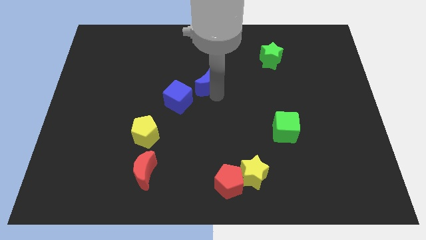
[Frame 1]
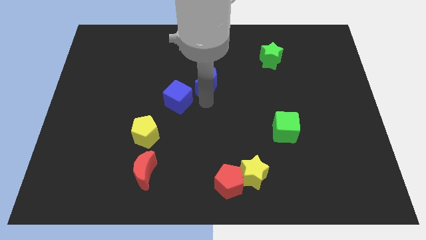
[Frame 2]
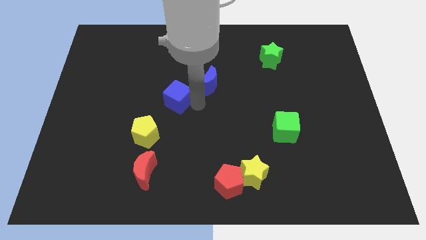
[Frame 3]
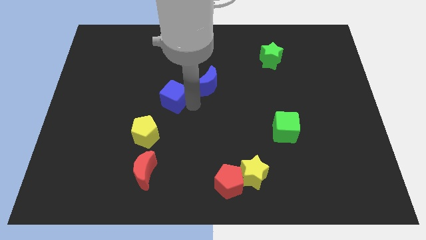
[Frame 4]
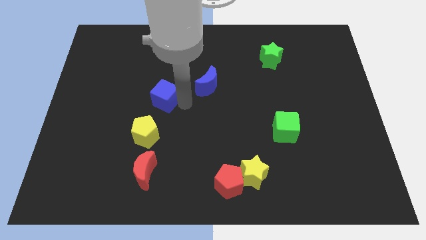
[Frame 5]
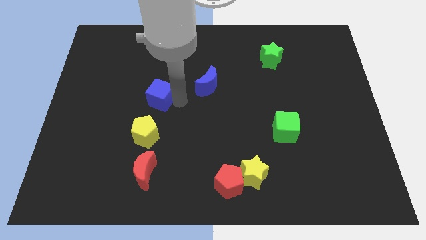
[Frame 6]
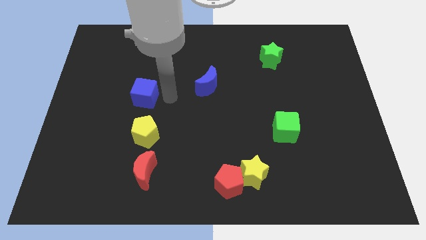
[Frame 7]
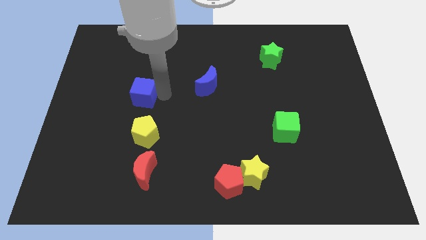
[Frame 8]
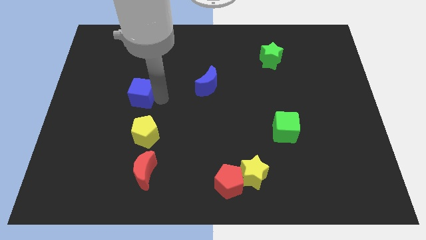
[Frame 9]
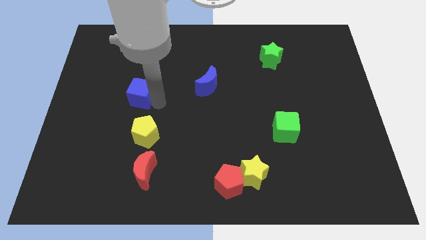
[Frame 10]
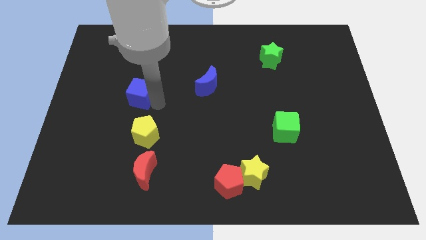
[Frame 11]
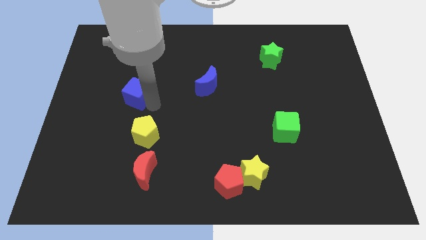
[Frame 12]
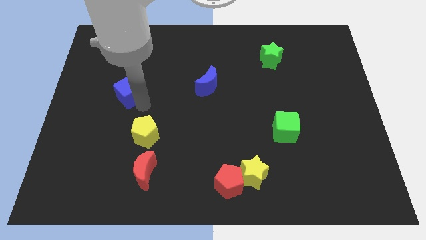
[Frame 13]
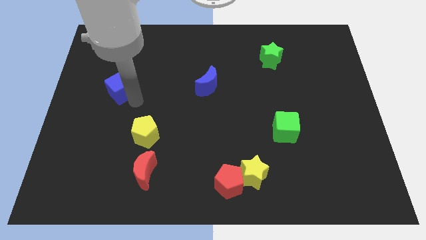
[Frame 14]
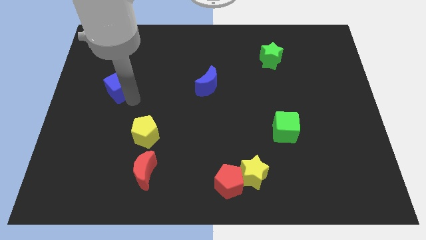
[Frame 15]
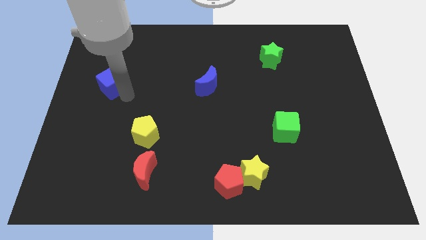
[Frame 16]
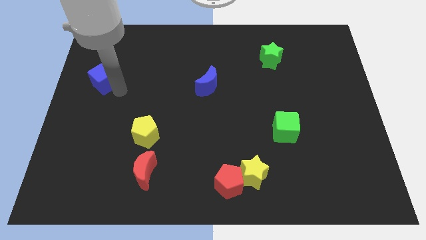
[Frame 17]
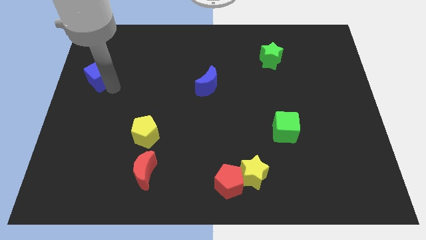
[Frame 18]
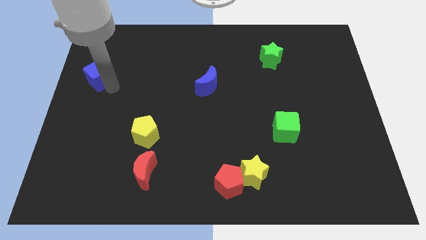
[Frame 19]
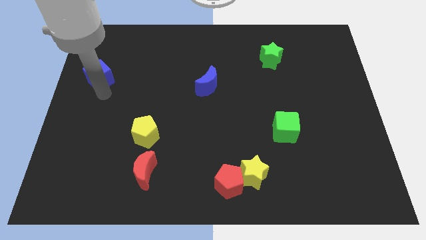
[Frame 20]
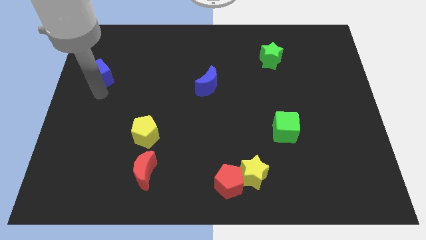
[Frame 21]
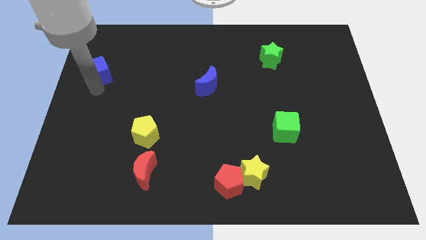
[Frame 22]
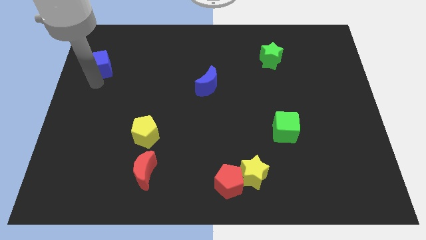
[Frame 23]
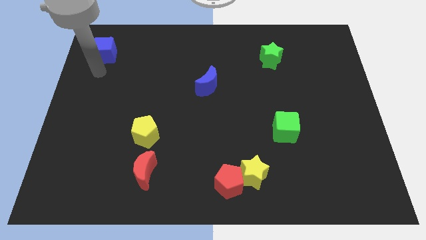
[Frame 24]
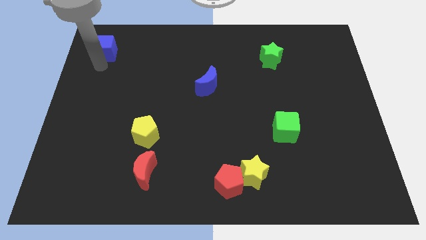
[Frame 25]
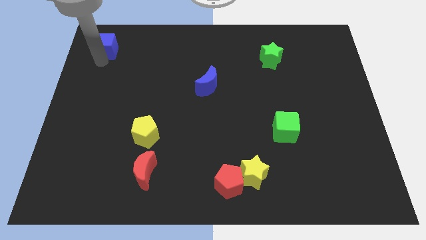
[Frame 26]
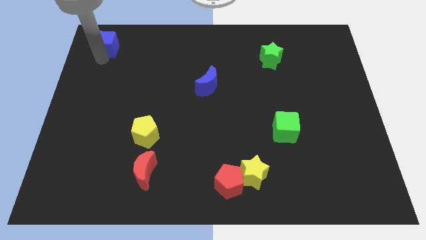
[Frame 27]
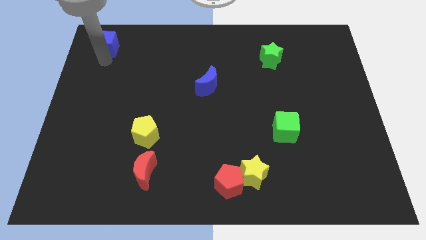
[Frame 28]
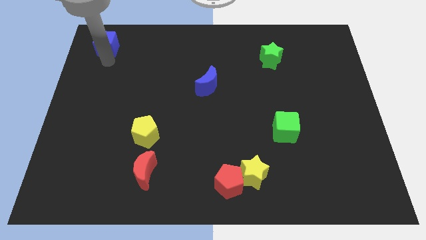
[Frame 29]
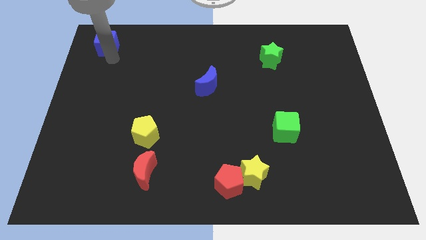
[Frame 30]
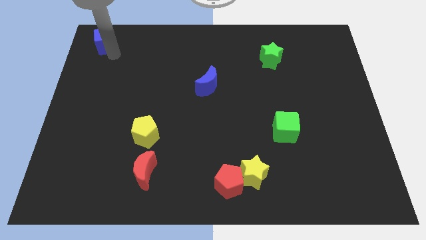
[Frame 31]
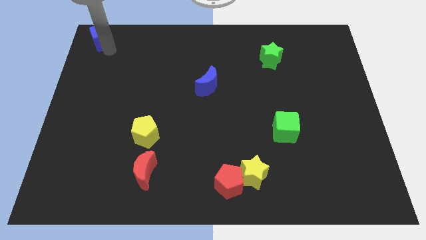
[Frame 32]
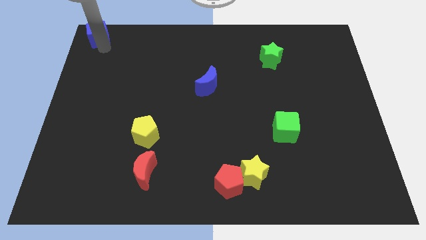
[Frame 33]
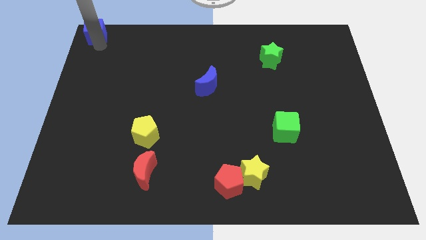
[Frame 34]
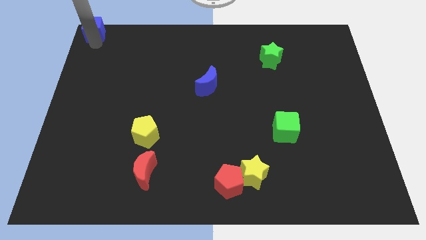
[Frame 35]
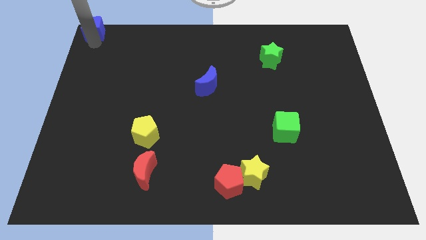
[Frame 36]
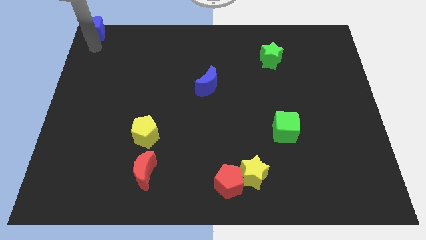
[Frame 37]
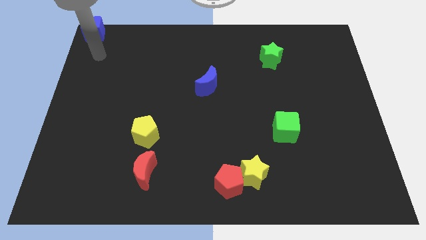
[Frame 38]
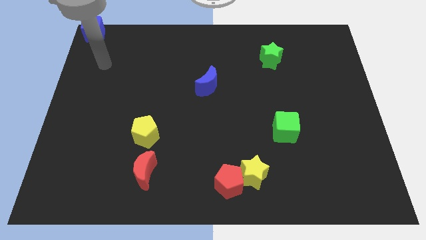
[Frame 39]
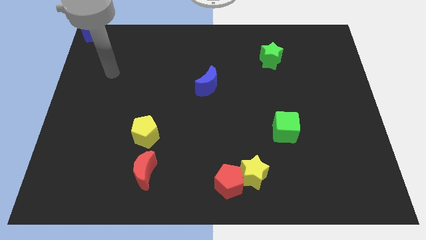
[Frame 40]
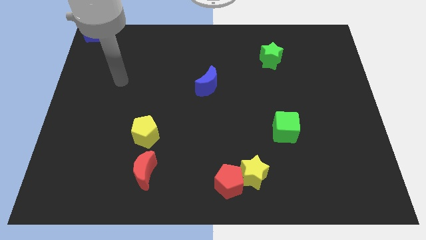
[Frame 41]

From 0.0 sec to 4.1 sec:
move the blue cube to the top left corner of the board

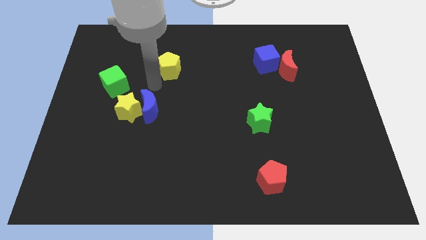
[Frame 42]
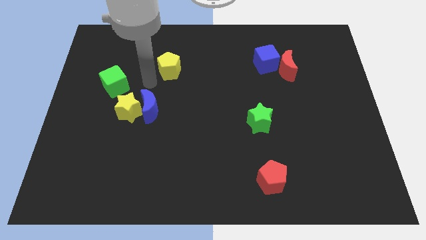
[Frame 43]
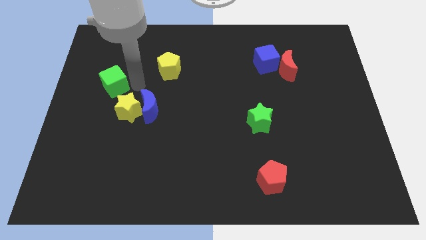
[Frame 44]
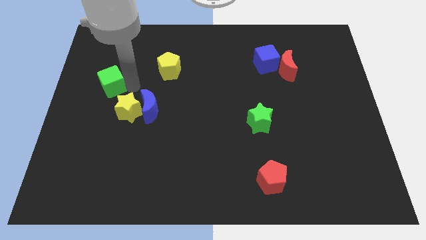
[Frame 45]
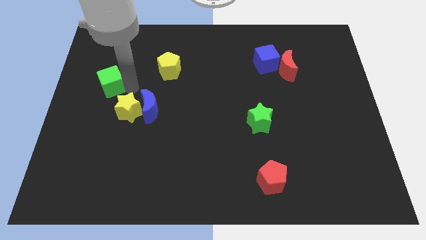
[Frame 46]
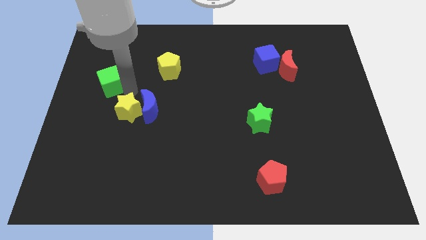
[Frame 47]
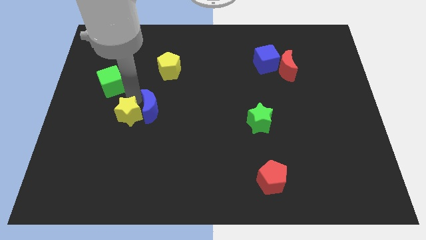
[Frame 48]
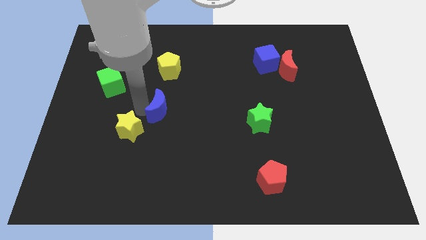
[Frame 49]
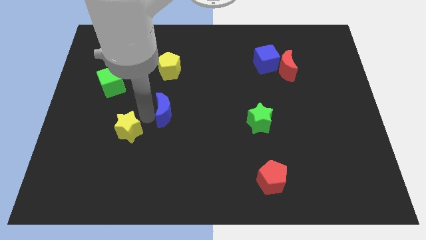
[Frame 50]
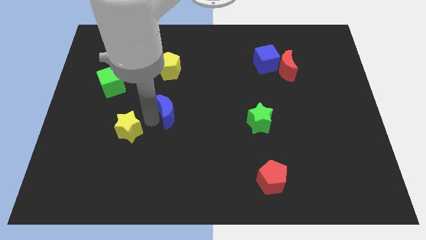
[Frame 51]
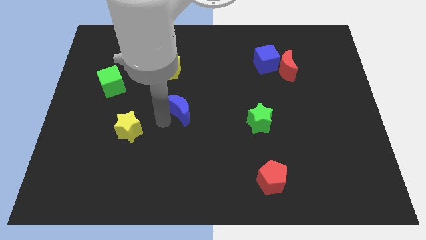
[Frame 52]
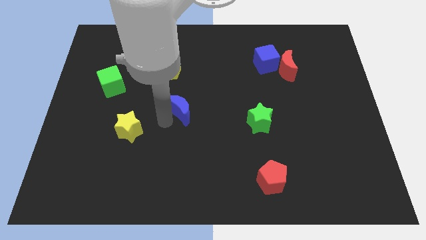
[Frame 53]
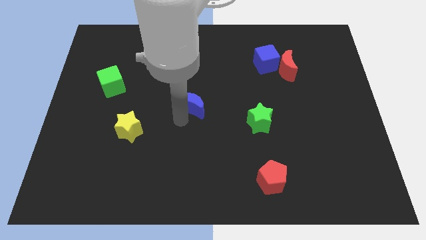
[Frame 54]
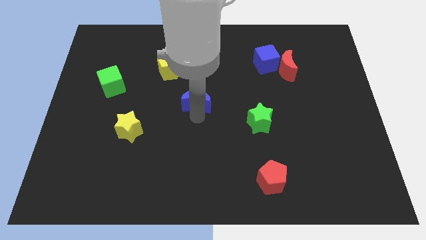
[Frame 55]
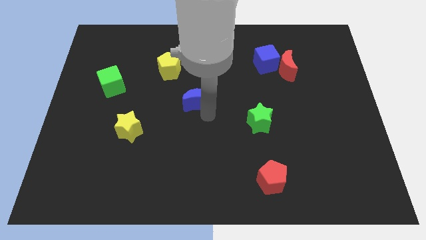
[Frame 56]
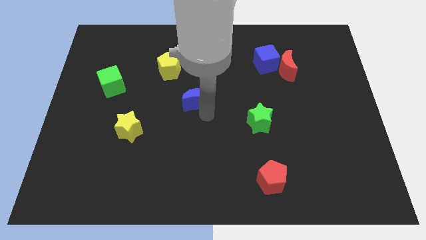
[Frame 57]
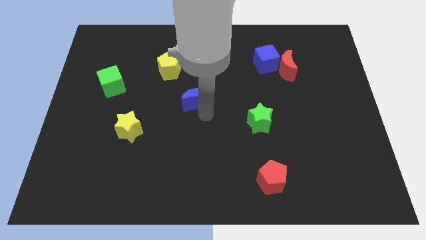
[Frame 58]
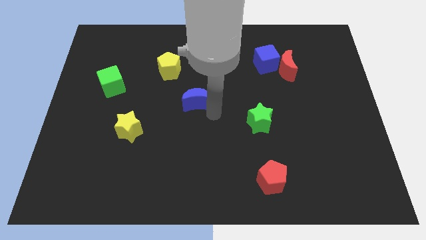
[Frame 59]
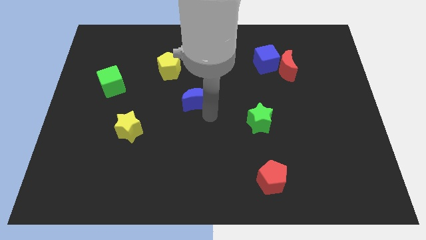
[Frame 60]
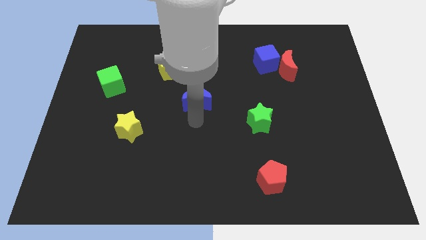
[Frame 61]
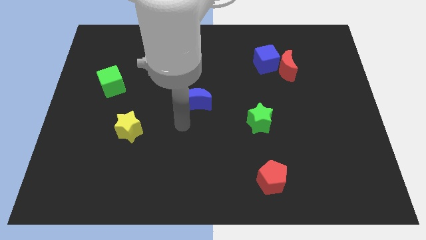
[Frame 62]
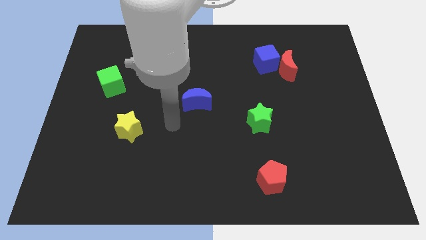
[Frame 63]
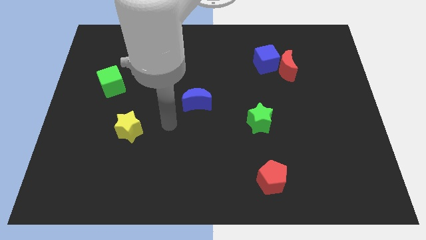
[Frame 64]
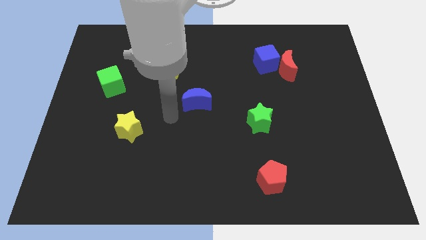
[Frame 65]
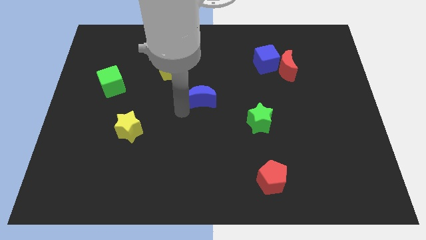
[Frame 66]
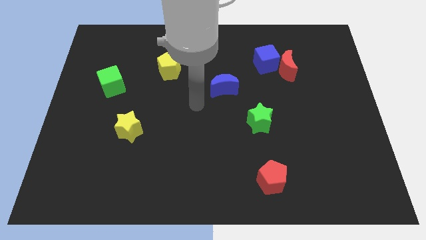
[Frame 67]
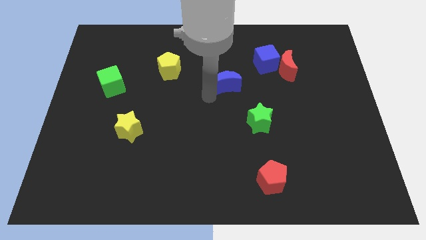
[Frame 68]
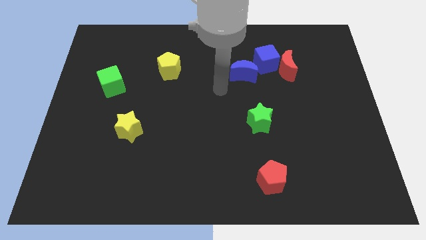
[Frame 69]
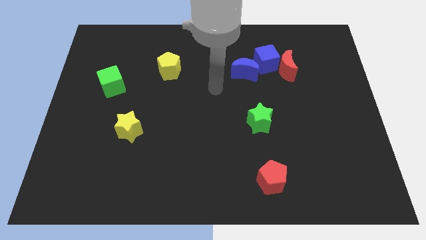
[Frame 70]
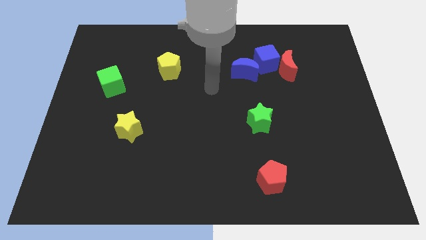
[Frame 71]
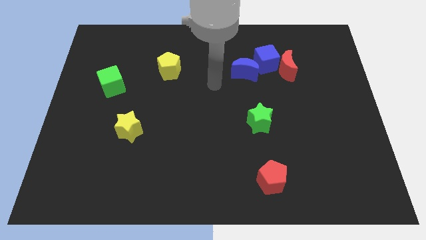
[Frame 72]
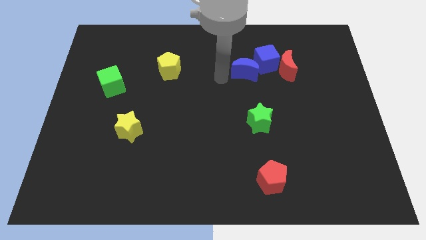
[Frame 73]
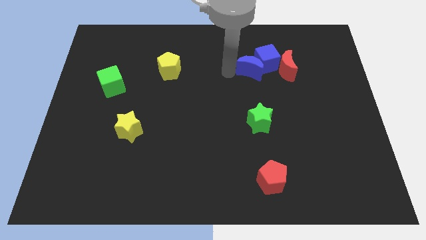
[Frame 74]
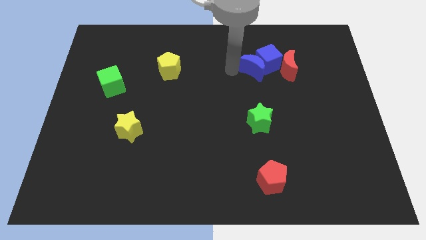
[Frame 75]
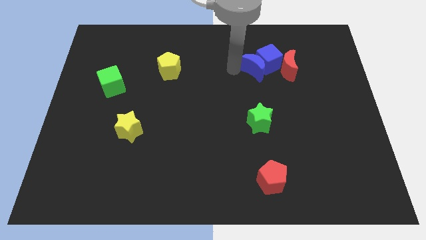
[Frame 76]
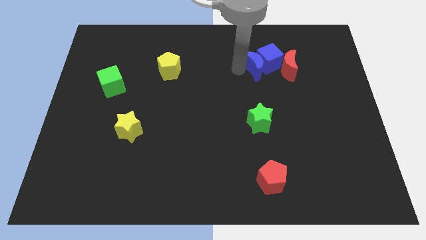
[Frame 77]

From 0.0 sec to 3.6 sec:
push the blue crescent to the left of the blue cube

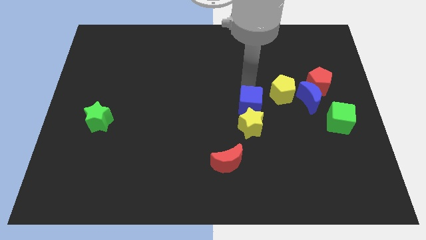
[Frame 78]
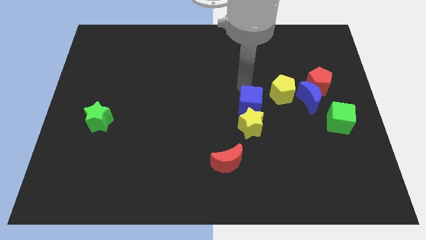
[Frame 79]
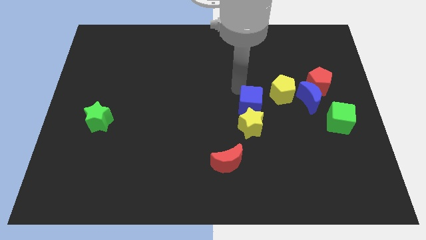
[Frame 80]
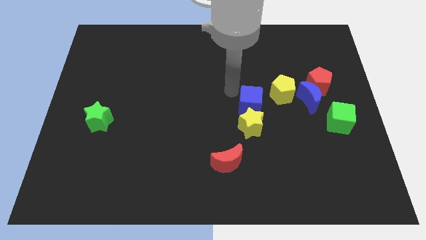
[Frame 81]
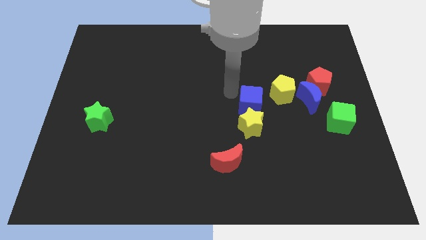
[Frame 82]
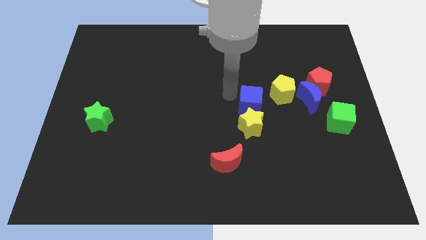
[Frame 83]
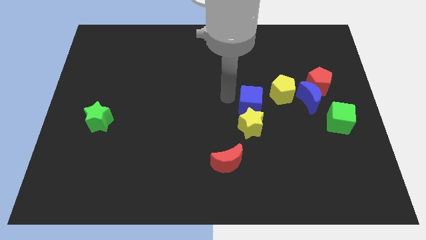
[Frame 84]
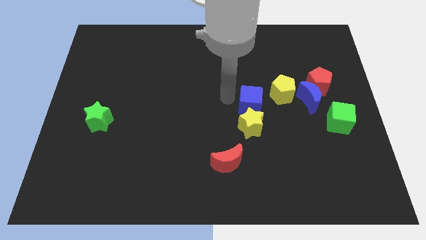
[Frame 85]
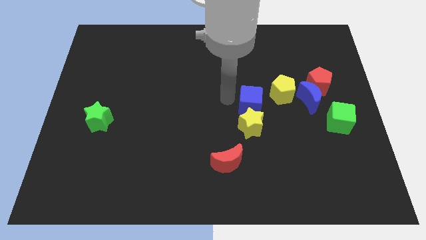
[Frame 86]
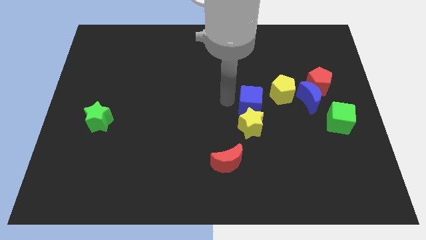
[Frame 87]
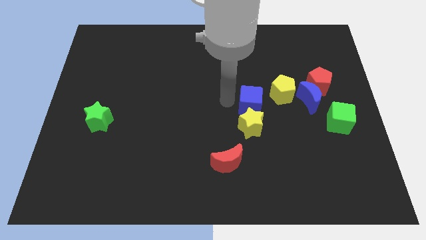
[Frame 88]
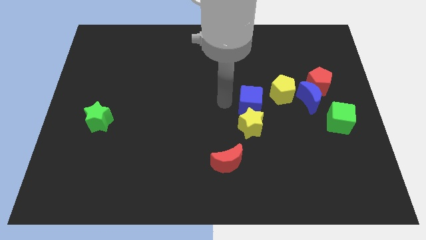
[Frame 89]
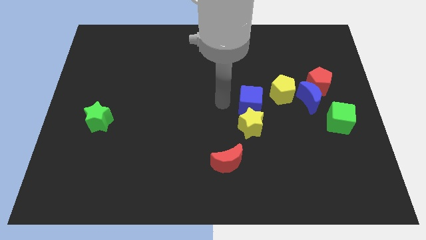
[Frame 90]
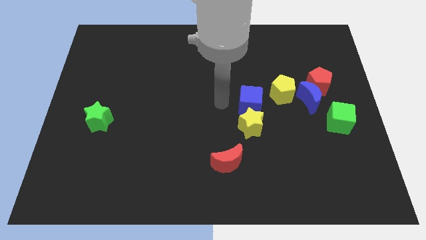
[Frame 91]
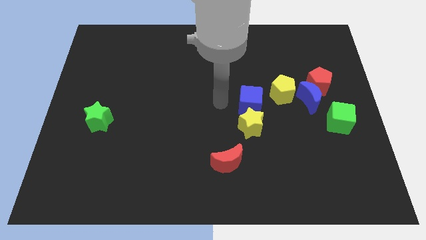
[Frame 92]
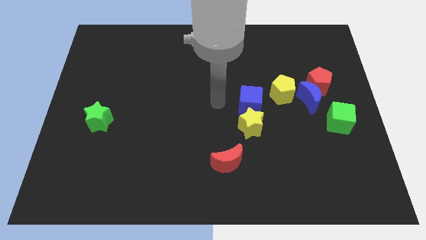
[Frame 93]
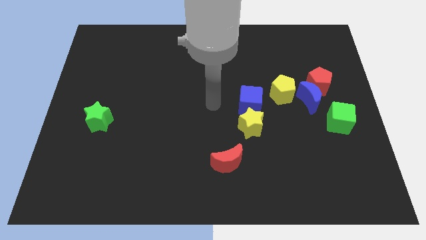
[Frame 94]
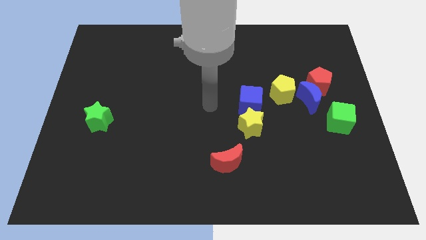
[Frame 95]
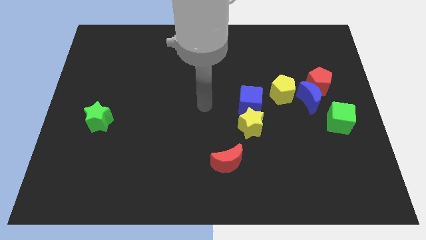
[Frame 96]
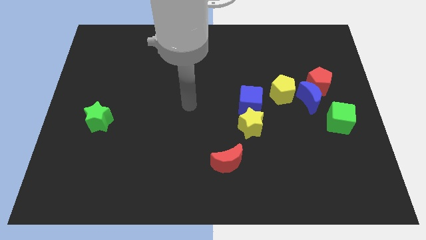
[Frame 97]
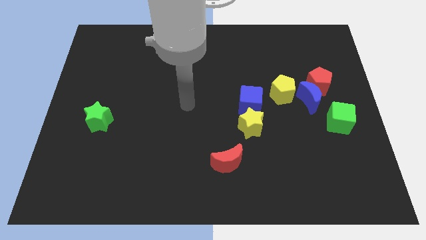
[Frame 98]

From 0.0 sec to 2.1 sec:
slide your arm away from blue cube
